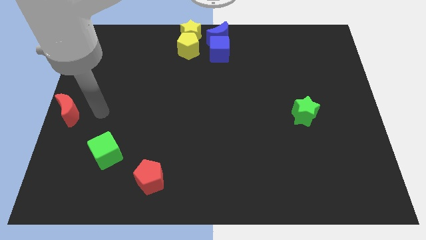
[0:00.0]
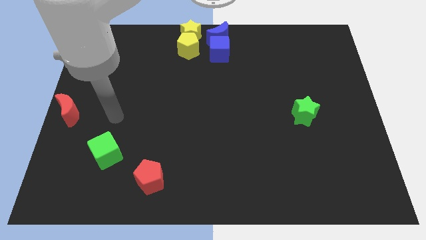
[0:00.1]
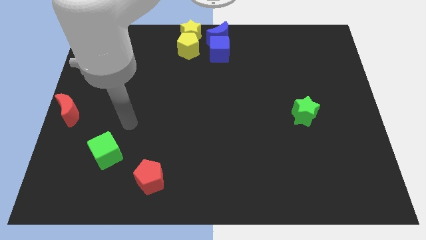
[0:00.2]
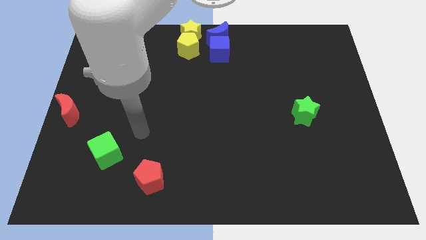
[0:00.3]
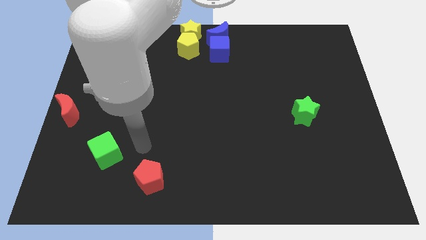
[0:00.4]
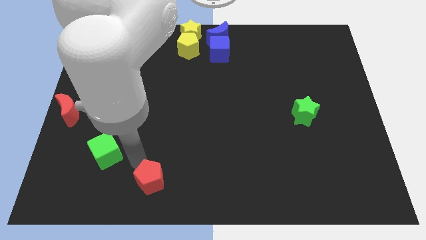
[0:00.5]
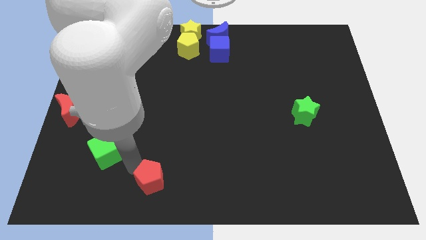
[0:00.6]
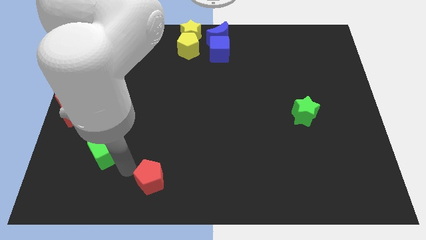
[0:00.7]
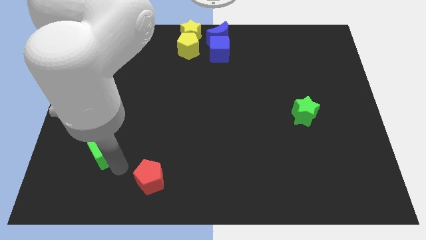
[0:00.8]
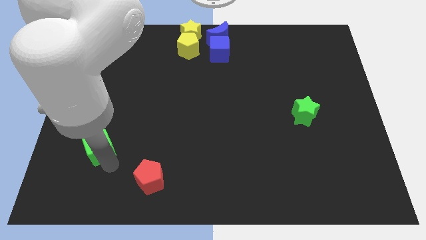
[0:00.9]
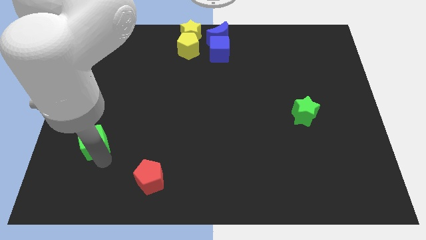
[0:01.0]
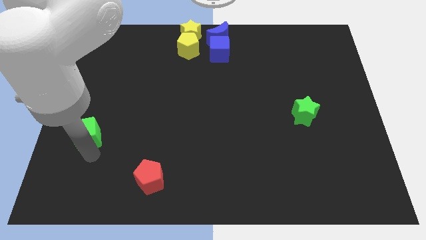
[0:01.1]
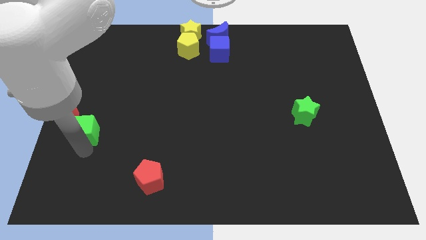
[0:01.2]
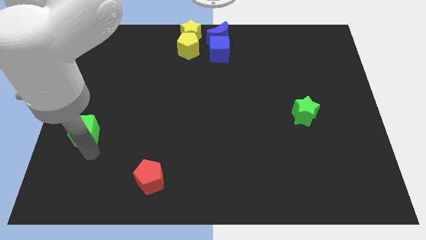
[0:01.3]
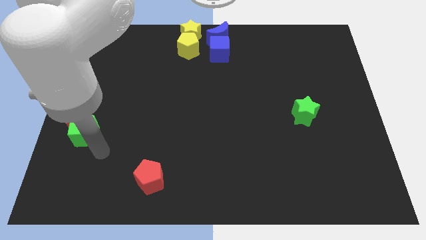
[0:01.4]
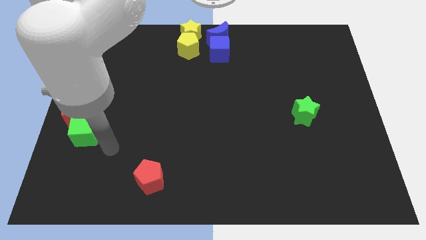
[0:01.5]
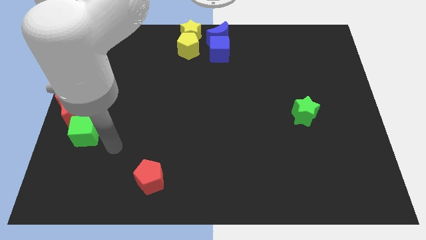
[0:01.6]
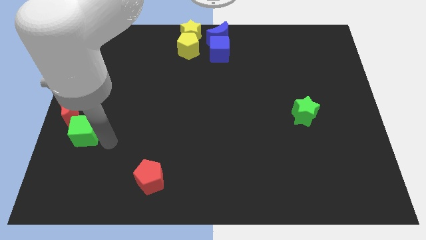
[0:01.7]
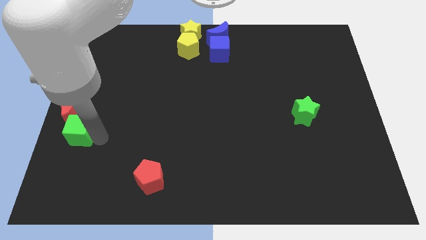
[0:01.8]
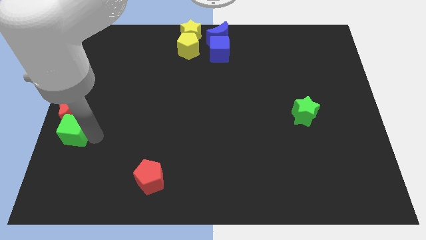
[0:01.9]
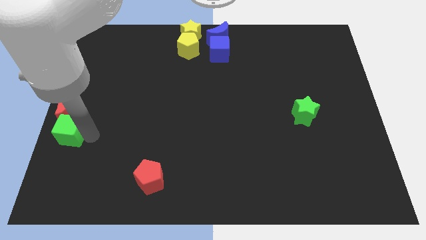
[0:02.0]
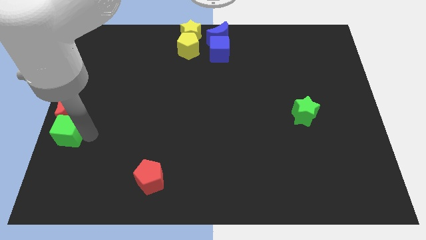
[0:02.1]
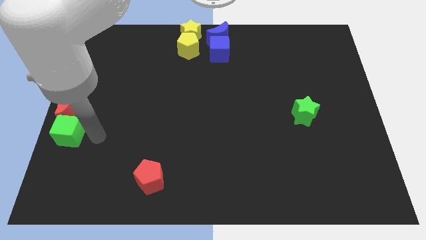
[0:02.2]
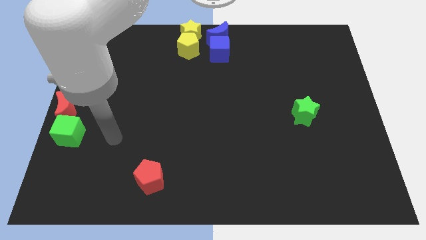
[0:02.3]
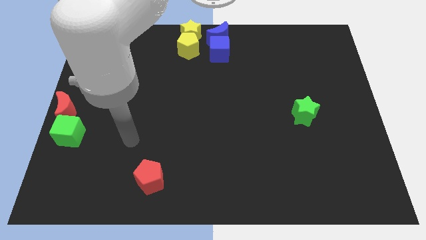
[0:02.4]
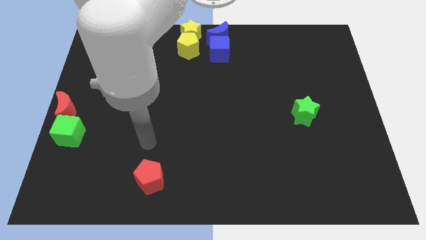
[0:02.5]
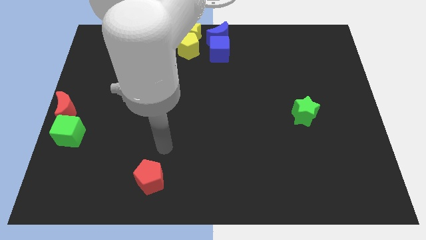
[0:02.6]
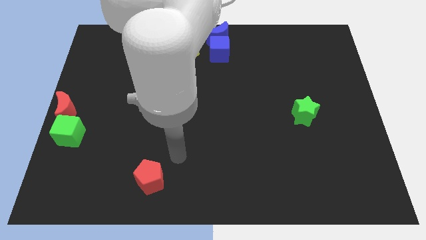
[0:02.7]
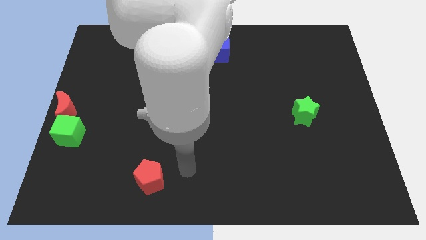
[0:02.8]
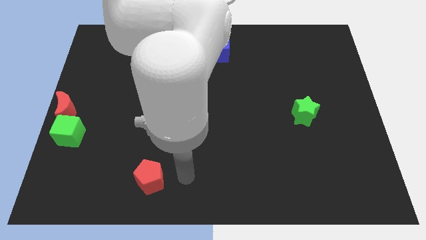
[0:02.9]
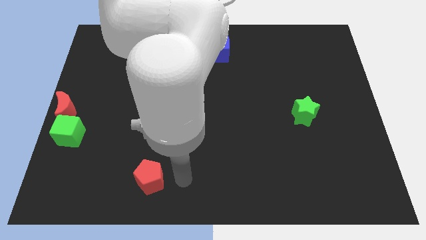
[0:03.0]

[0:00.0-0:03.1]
place green cube below red moon

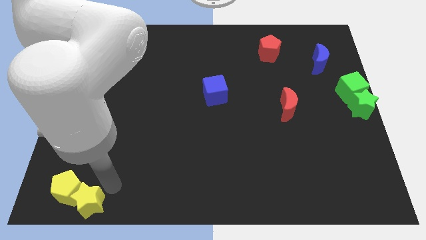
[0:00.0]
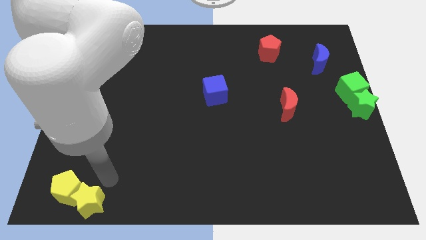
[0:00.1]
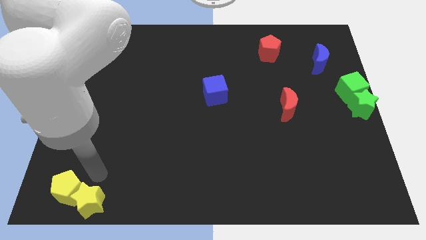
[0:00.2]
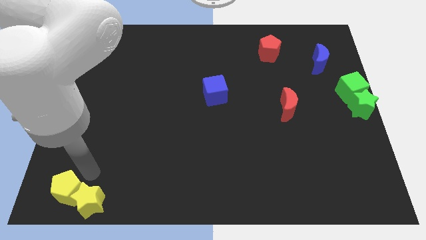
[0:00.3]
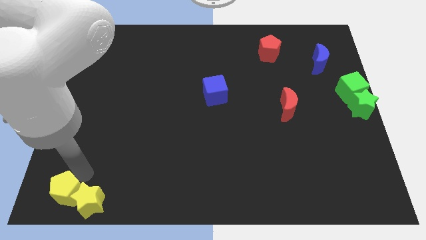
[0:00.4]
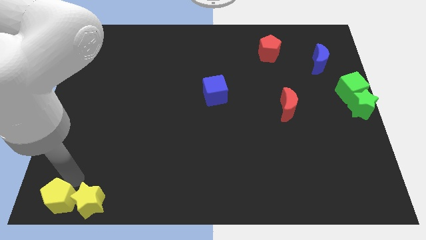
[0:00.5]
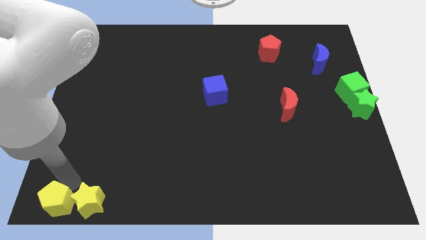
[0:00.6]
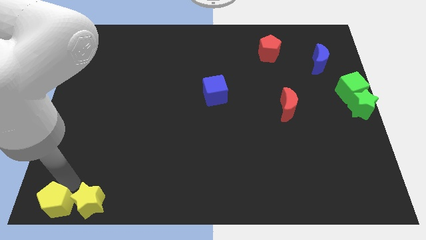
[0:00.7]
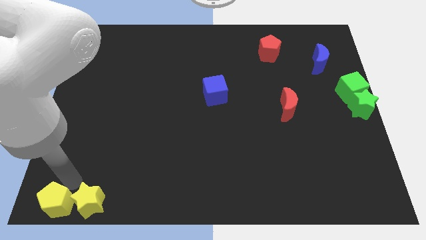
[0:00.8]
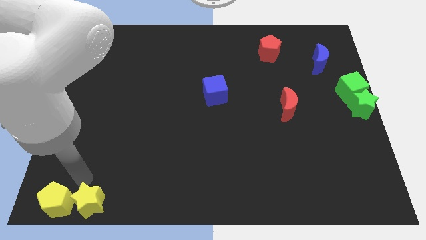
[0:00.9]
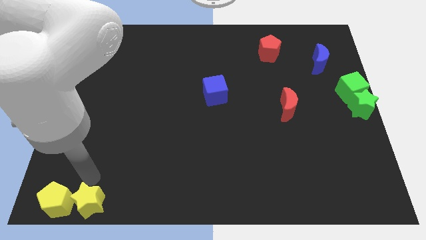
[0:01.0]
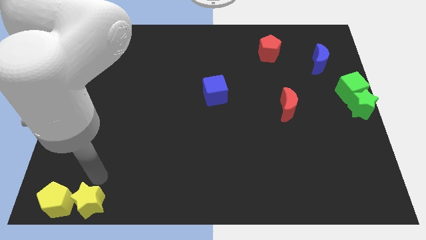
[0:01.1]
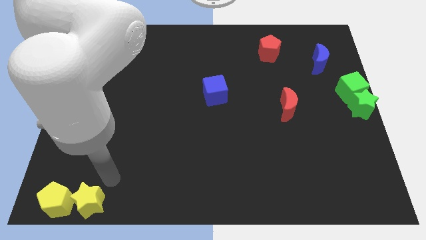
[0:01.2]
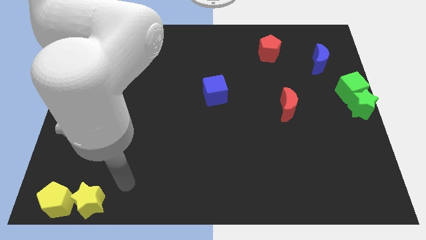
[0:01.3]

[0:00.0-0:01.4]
separate yellow pentagon from yellow star

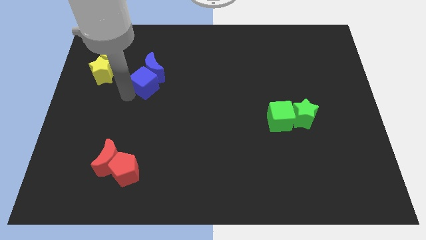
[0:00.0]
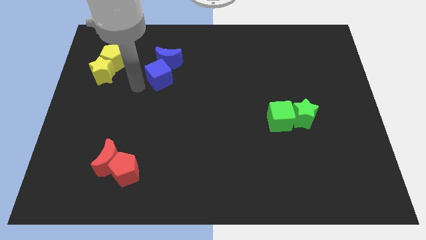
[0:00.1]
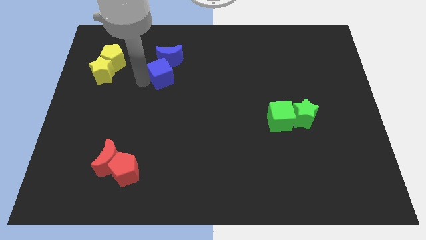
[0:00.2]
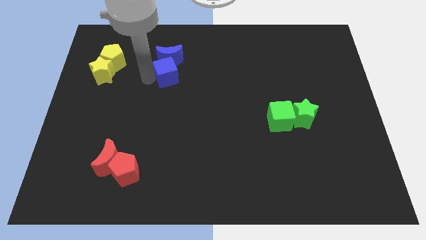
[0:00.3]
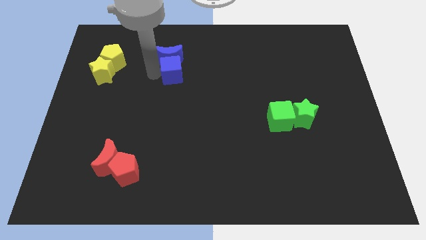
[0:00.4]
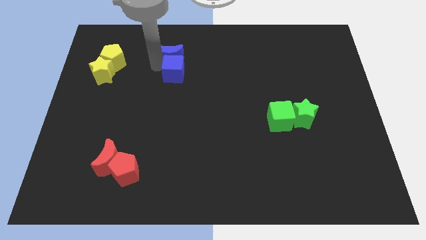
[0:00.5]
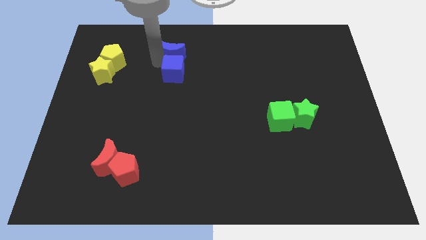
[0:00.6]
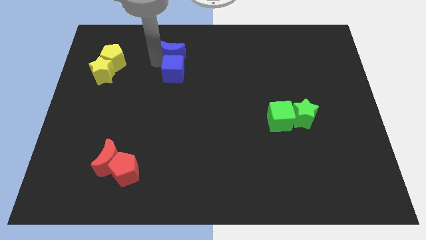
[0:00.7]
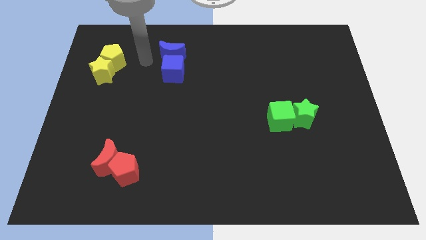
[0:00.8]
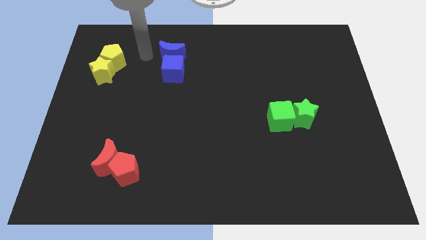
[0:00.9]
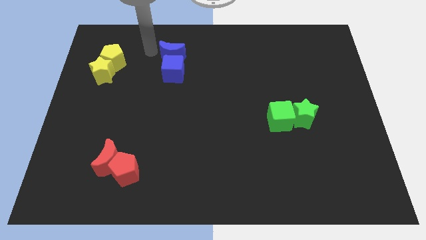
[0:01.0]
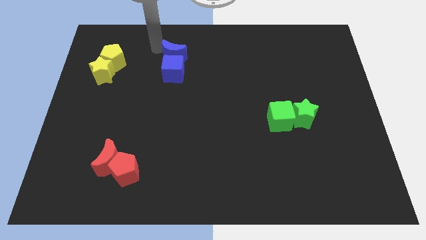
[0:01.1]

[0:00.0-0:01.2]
push the blue cube and blue crescent slightly upwards

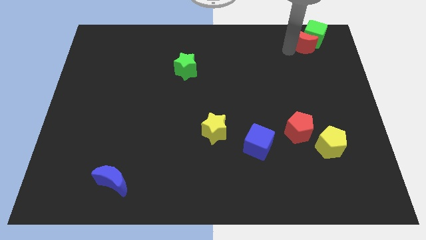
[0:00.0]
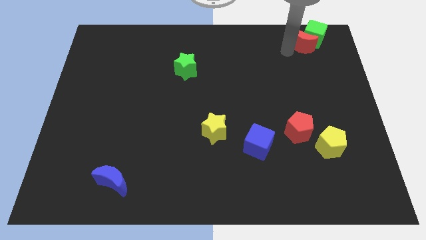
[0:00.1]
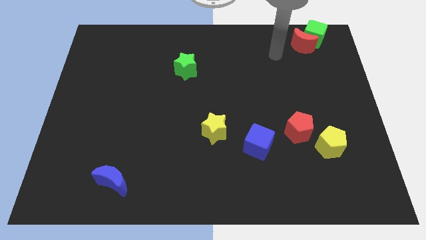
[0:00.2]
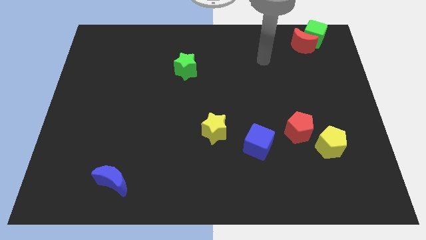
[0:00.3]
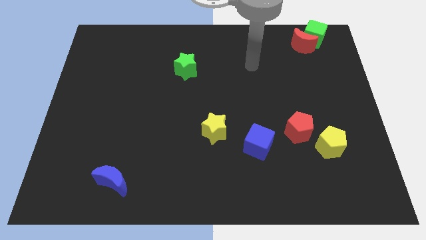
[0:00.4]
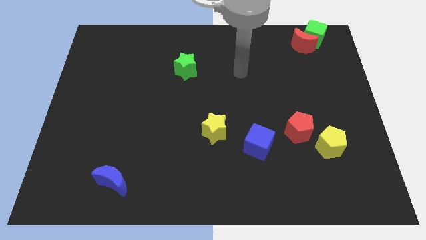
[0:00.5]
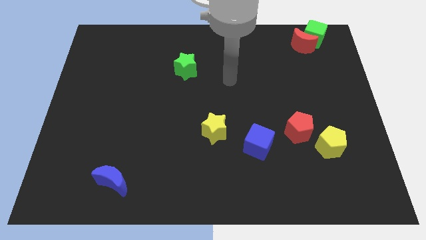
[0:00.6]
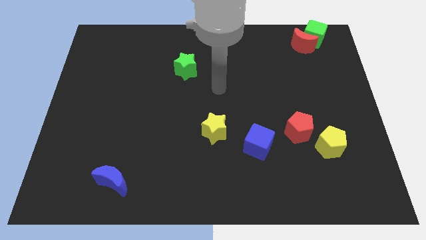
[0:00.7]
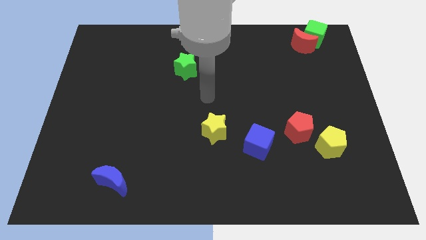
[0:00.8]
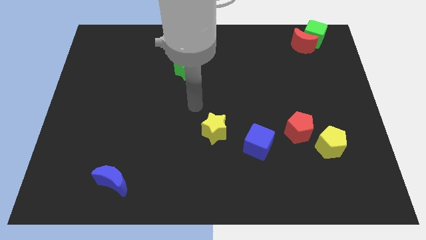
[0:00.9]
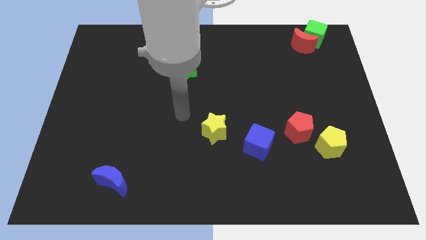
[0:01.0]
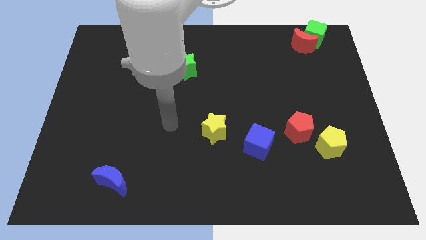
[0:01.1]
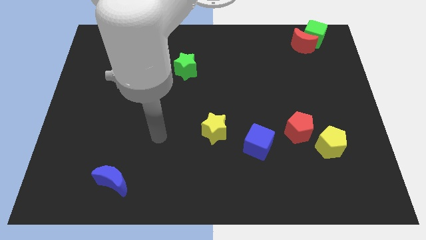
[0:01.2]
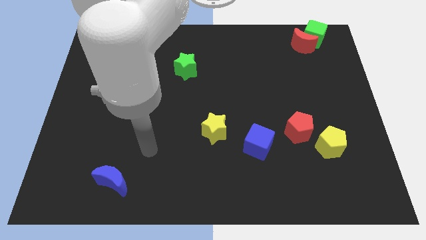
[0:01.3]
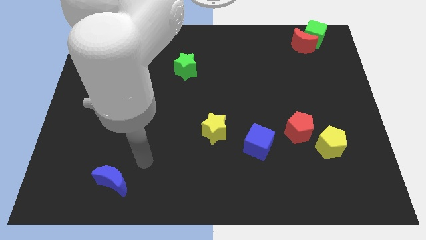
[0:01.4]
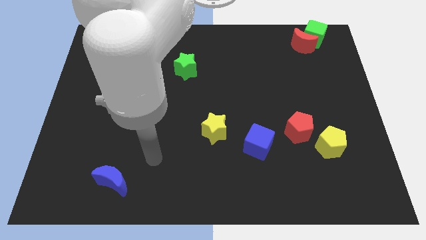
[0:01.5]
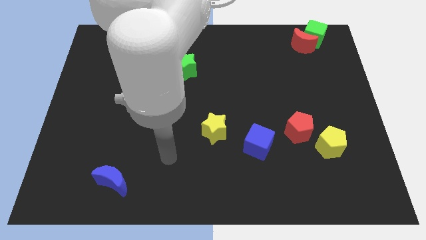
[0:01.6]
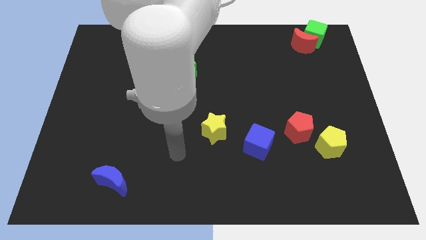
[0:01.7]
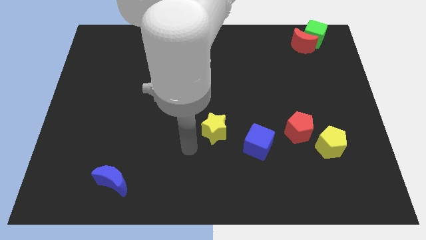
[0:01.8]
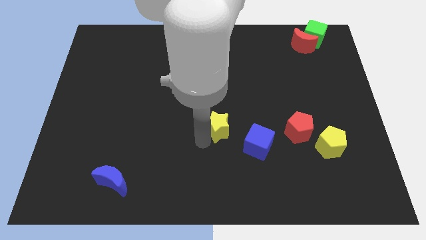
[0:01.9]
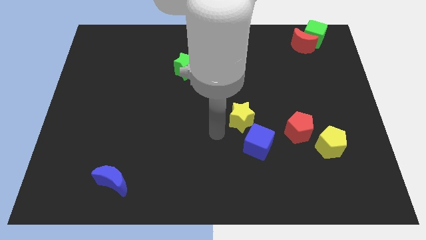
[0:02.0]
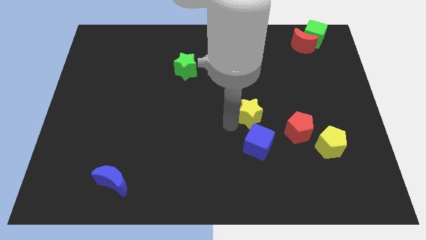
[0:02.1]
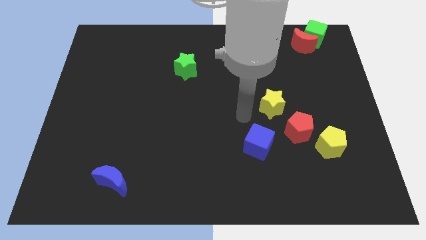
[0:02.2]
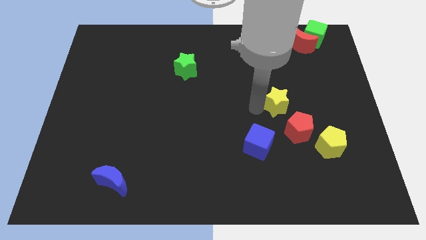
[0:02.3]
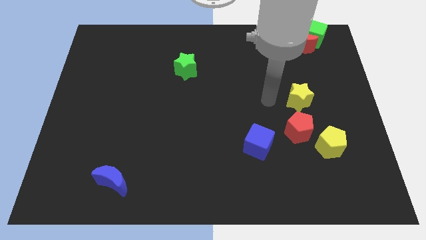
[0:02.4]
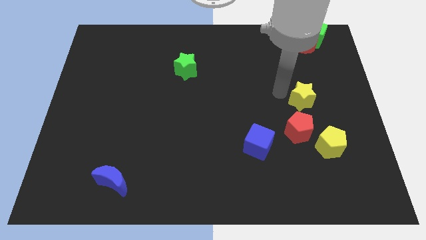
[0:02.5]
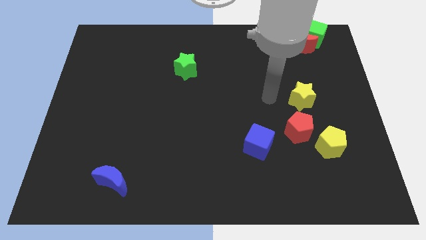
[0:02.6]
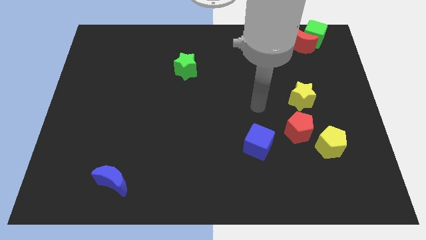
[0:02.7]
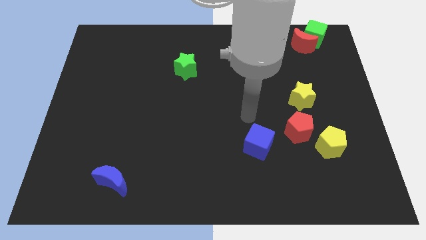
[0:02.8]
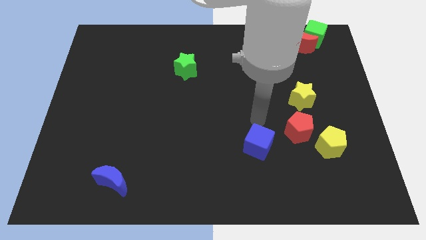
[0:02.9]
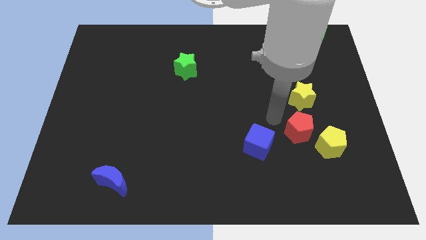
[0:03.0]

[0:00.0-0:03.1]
place the yellow star in between the red pentagon and red moon

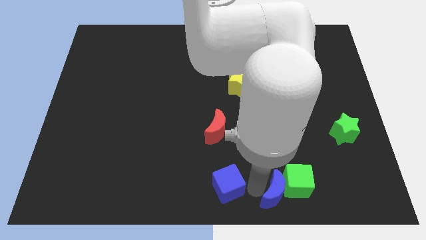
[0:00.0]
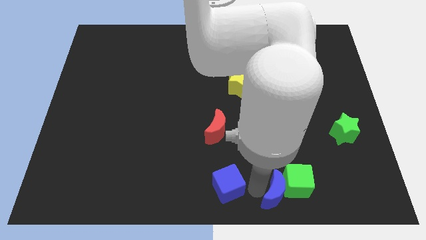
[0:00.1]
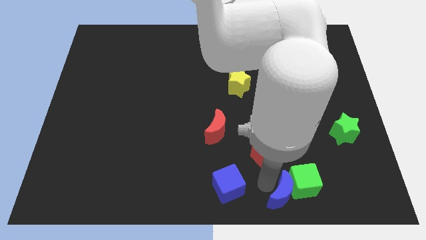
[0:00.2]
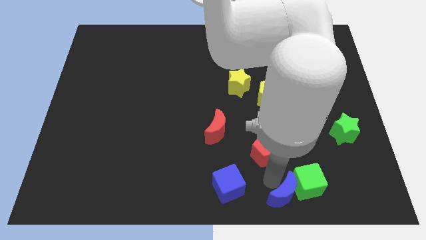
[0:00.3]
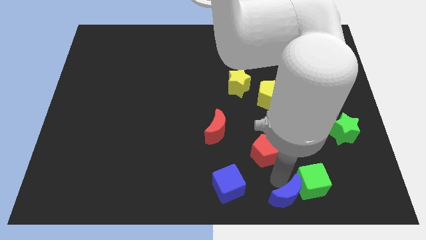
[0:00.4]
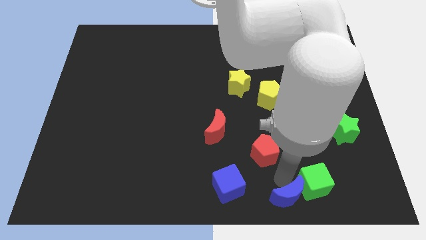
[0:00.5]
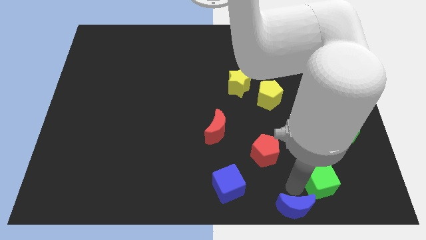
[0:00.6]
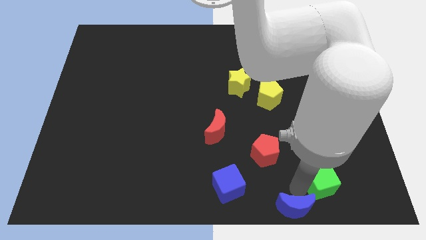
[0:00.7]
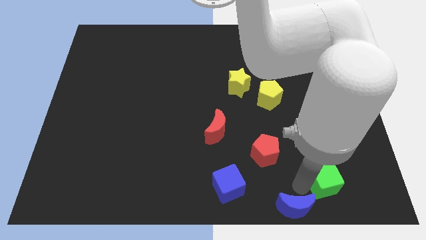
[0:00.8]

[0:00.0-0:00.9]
push the blue moon and green cube towards the right side of the board
